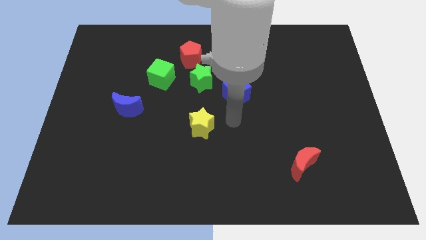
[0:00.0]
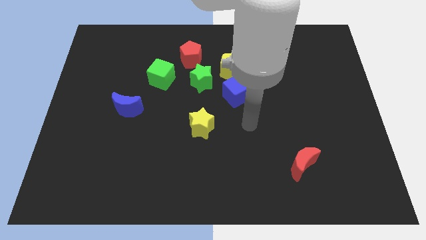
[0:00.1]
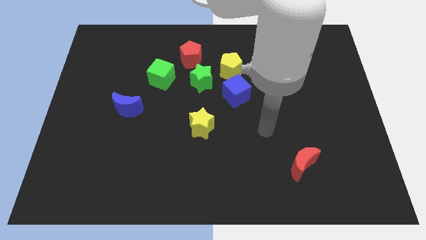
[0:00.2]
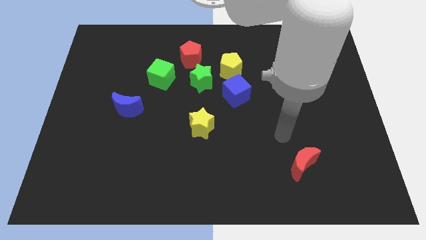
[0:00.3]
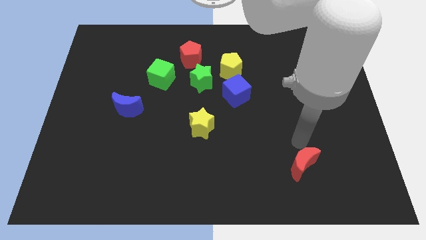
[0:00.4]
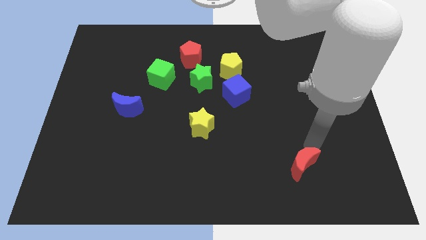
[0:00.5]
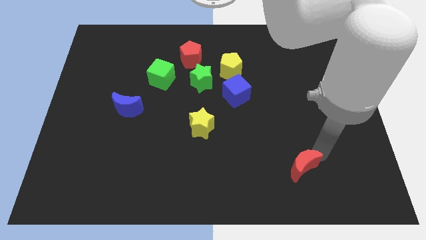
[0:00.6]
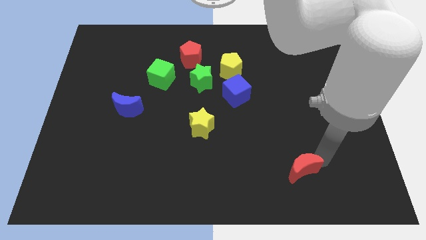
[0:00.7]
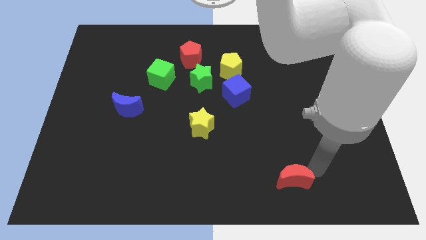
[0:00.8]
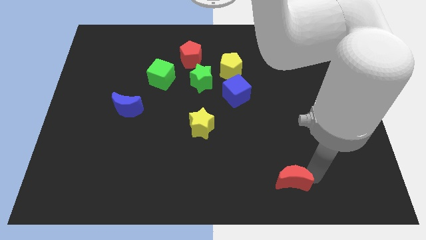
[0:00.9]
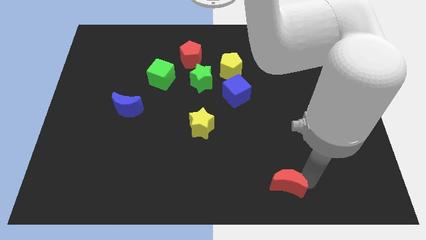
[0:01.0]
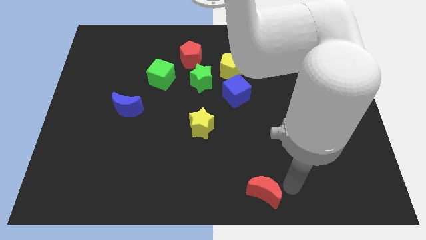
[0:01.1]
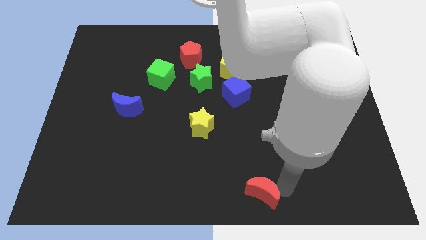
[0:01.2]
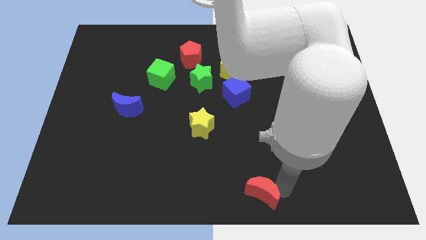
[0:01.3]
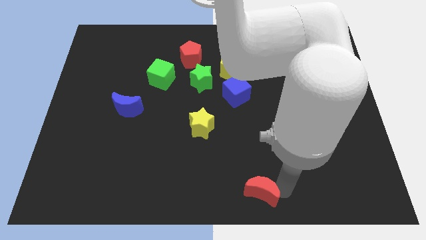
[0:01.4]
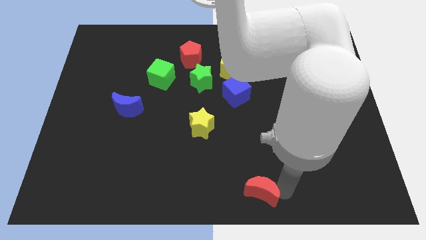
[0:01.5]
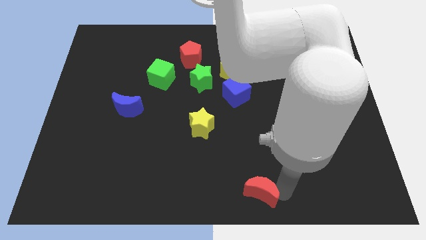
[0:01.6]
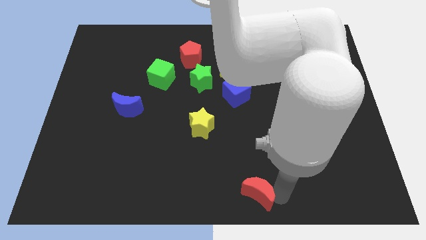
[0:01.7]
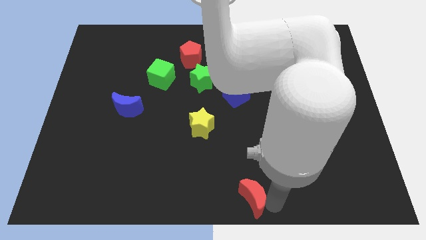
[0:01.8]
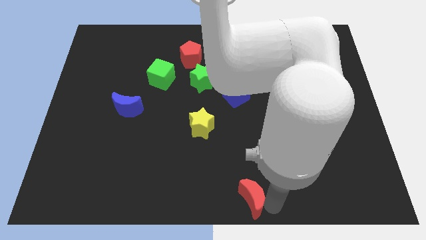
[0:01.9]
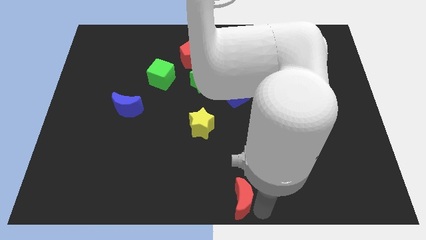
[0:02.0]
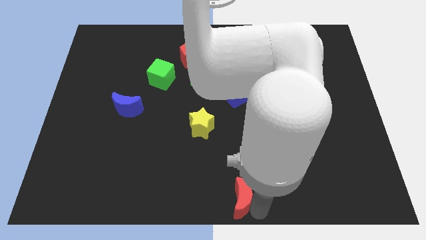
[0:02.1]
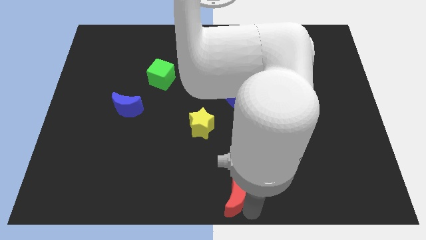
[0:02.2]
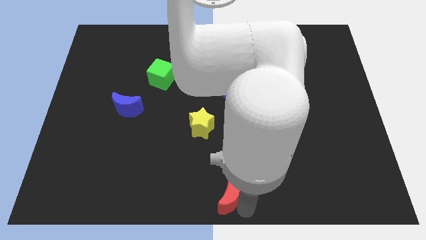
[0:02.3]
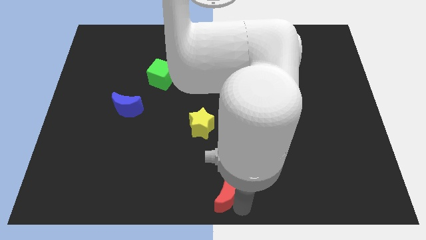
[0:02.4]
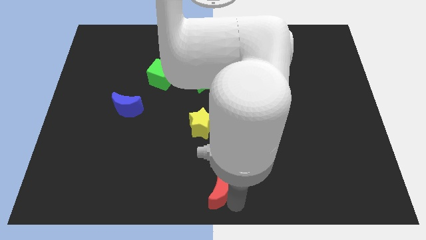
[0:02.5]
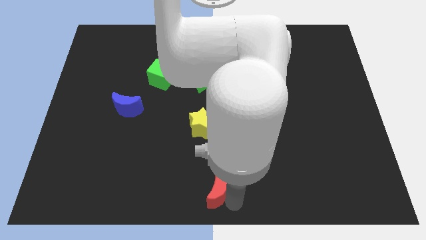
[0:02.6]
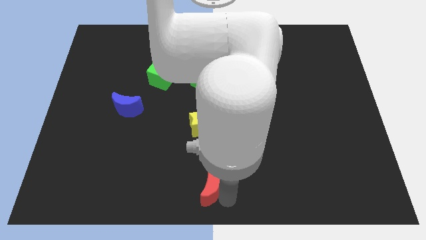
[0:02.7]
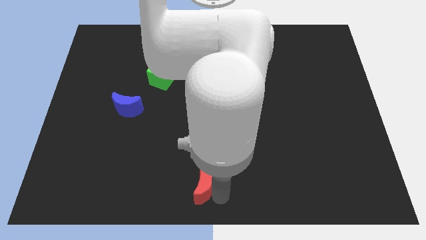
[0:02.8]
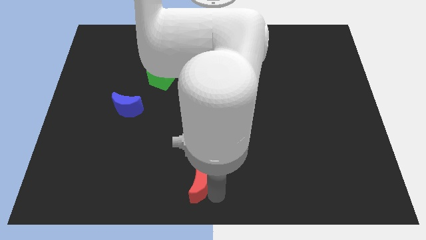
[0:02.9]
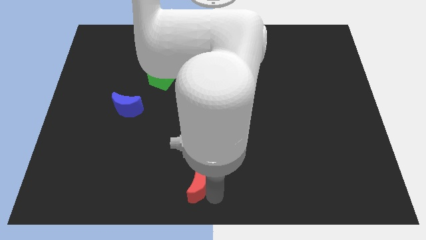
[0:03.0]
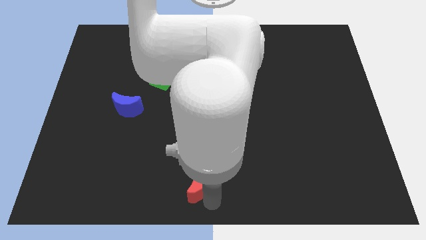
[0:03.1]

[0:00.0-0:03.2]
push red crescent below yellow star

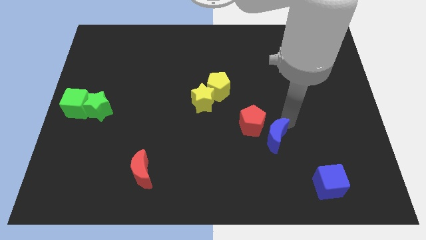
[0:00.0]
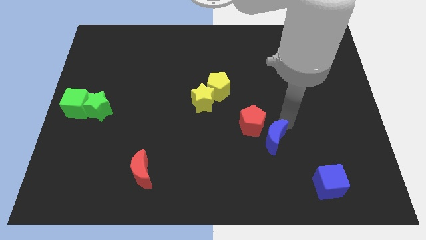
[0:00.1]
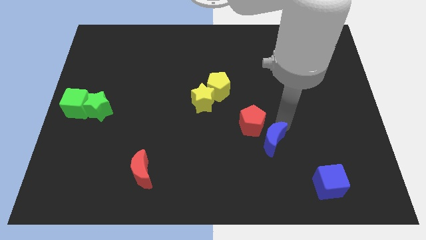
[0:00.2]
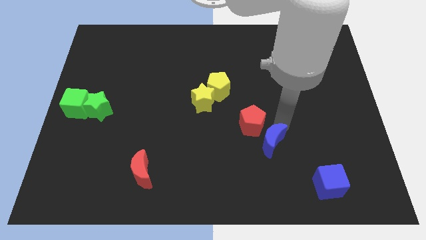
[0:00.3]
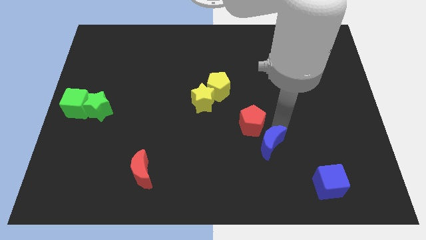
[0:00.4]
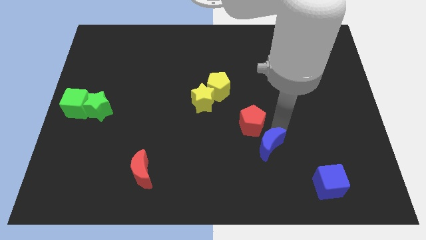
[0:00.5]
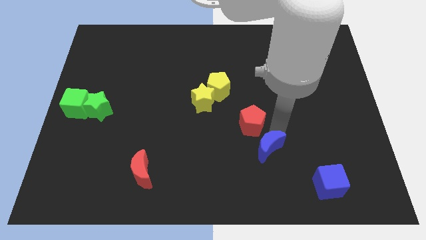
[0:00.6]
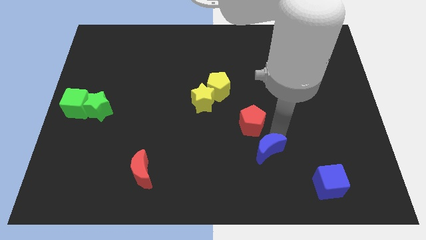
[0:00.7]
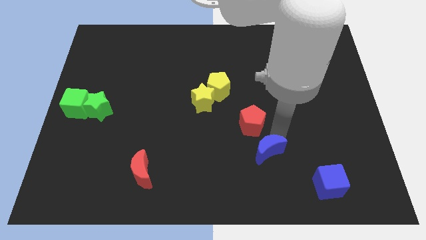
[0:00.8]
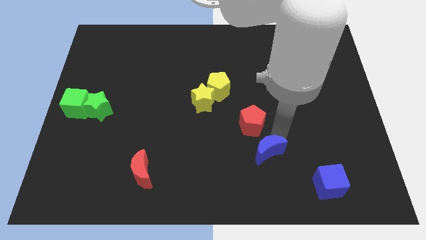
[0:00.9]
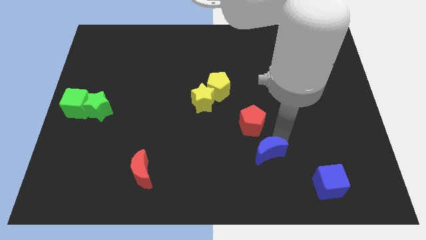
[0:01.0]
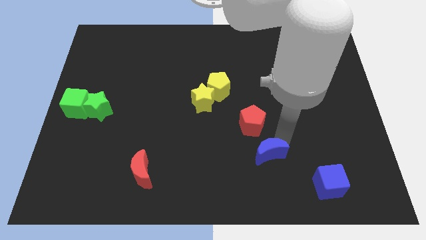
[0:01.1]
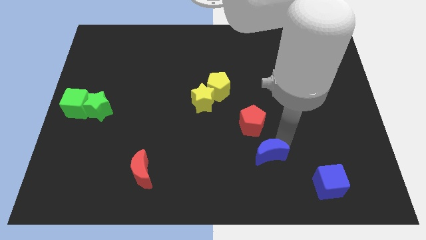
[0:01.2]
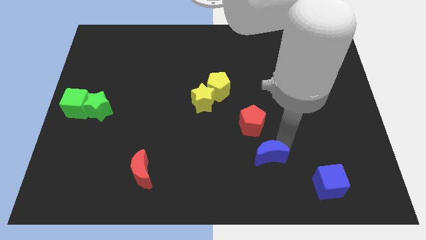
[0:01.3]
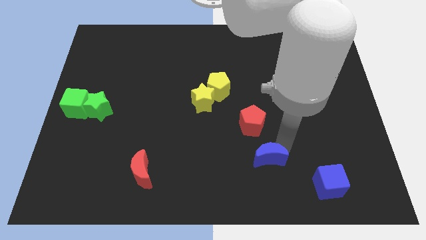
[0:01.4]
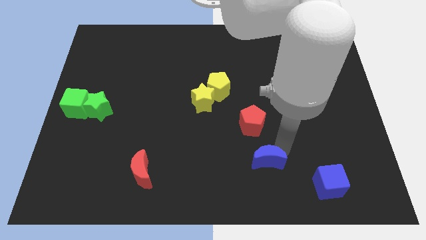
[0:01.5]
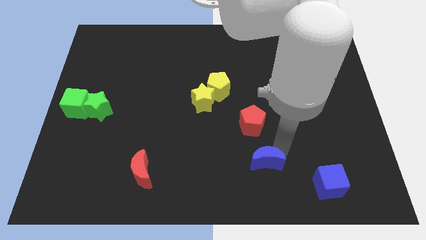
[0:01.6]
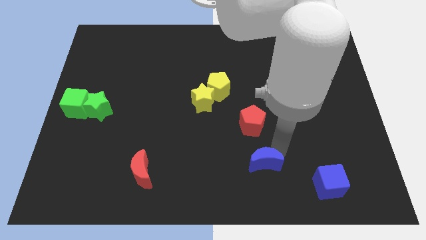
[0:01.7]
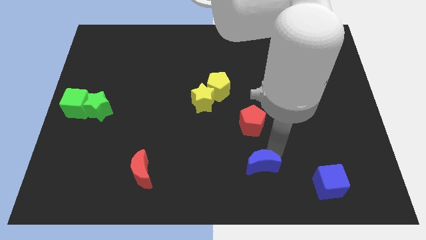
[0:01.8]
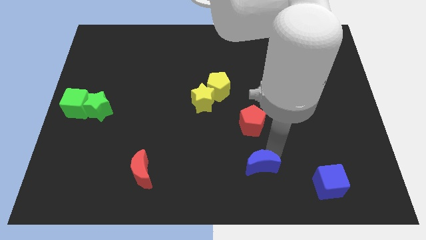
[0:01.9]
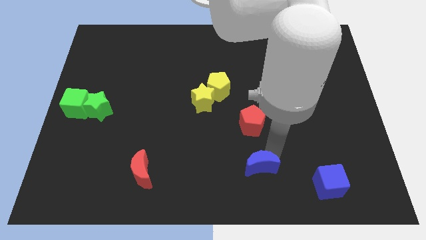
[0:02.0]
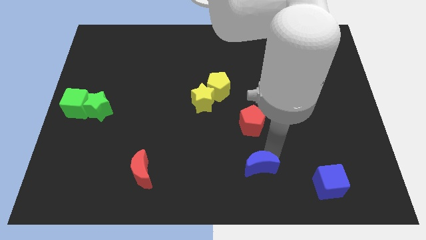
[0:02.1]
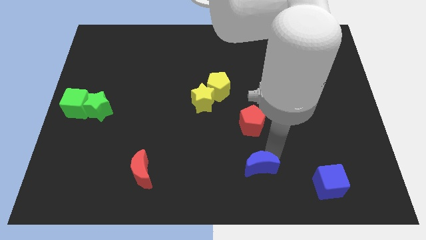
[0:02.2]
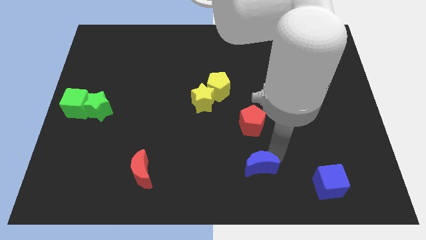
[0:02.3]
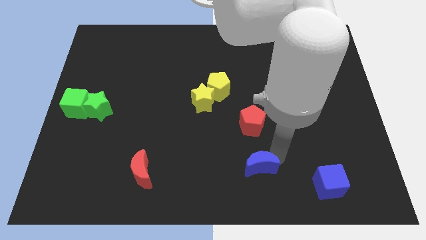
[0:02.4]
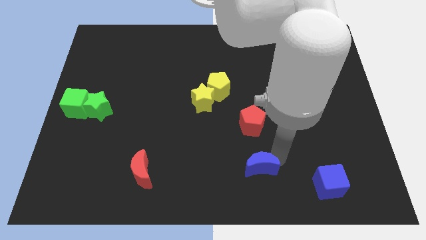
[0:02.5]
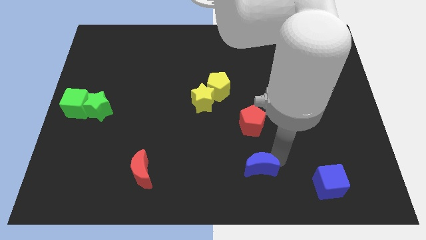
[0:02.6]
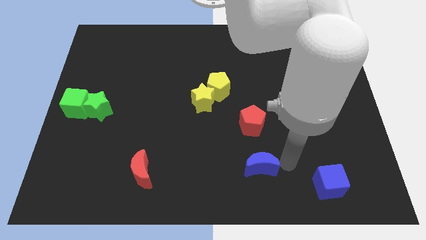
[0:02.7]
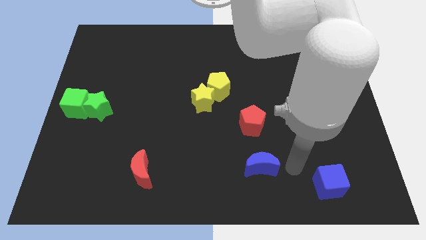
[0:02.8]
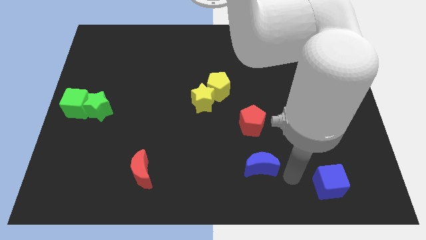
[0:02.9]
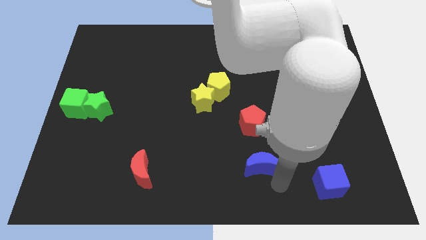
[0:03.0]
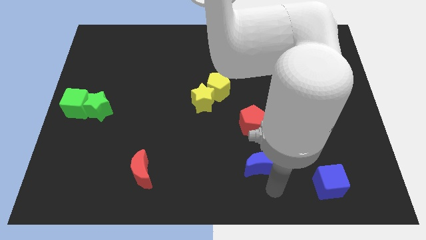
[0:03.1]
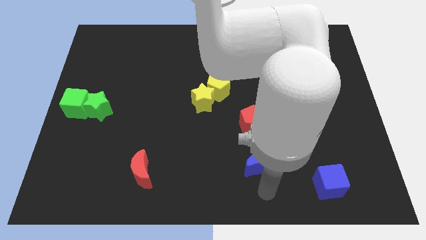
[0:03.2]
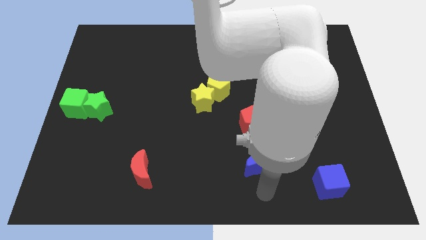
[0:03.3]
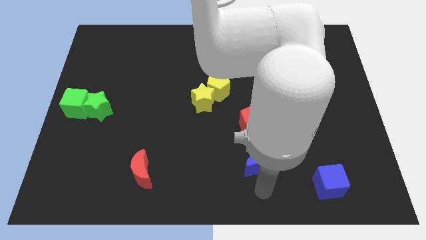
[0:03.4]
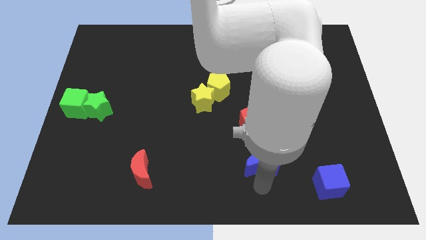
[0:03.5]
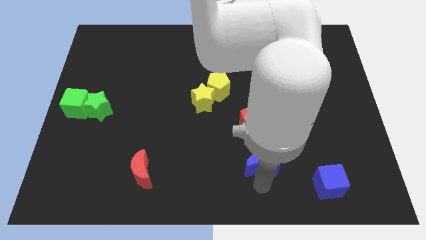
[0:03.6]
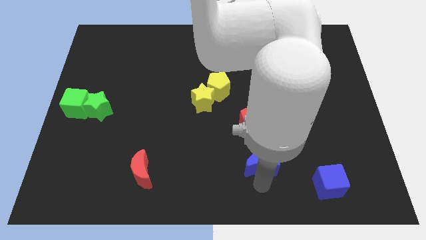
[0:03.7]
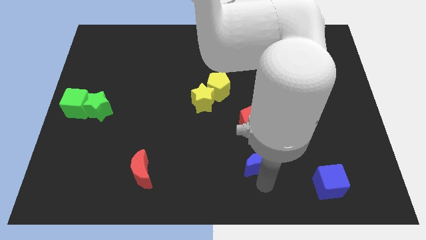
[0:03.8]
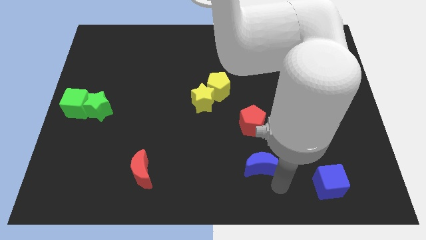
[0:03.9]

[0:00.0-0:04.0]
put the blue crescent at the right of the red crescent

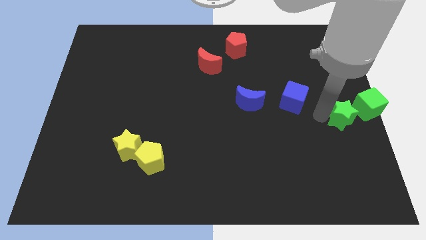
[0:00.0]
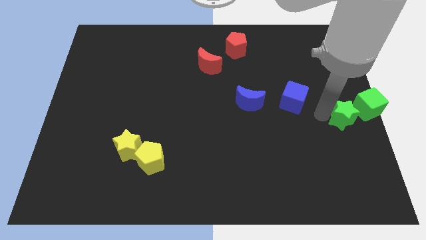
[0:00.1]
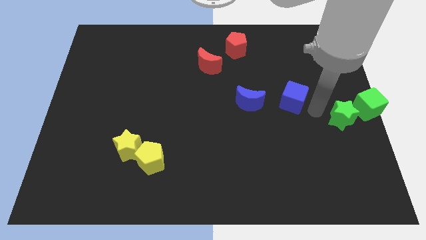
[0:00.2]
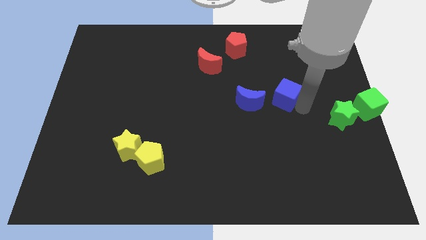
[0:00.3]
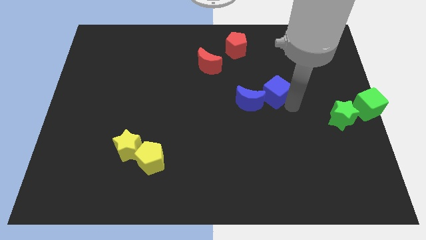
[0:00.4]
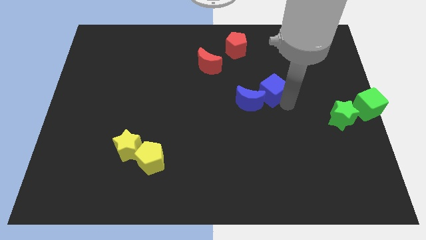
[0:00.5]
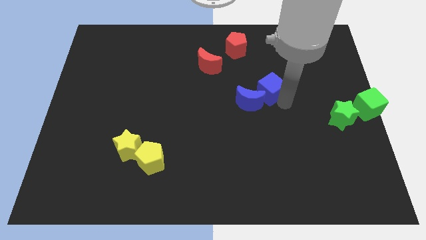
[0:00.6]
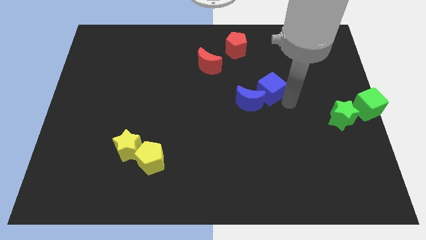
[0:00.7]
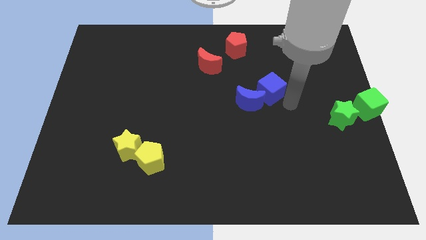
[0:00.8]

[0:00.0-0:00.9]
place the blue cube right to the blue moon

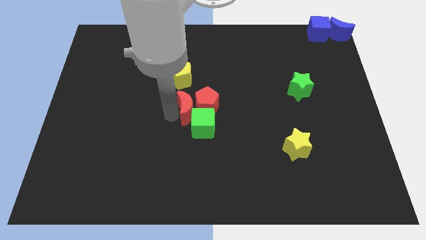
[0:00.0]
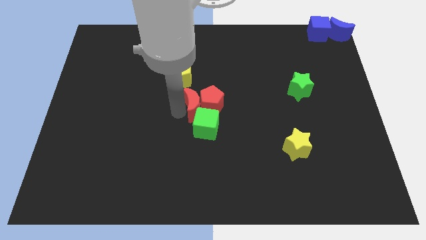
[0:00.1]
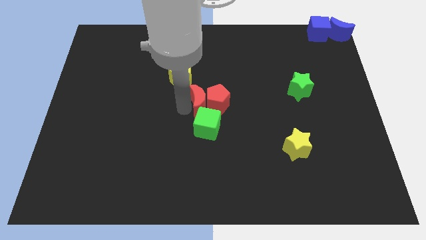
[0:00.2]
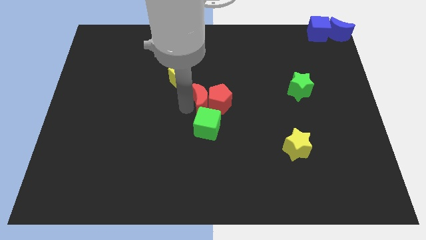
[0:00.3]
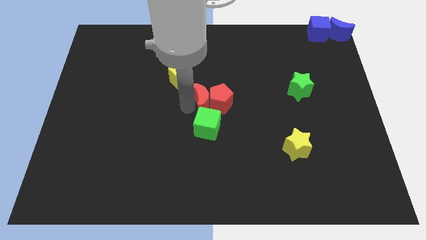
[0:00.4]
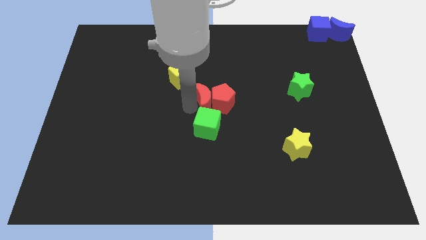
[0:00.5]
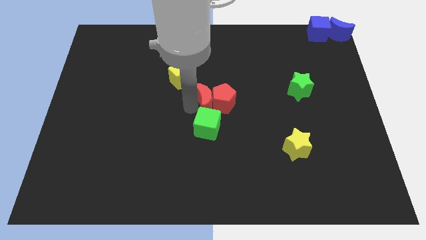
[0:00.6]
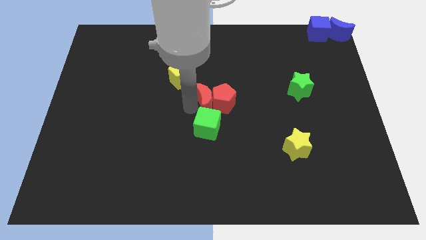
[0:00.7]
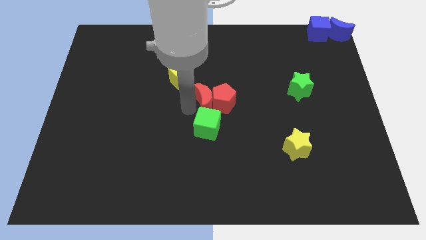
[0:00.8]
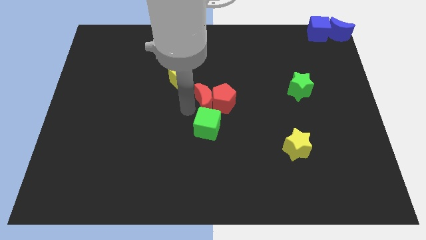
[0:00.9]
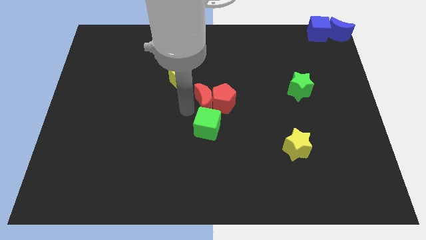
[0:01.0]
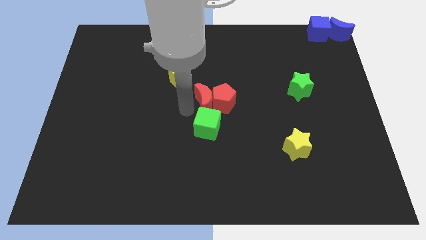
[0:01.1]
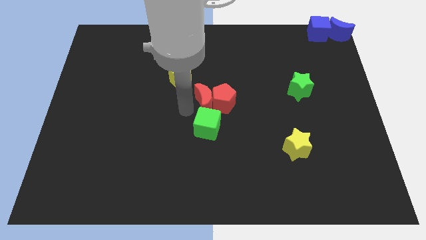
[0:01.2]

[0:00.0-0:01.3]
push the red moon into the red pentagon
